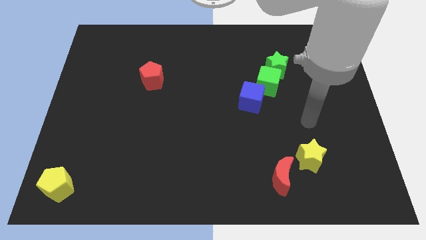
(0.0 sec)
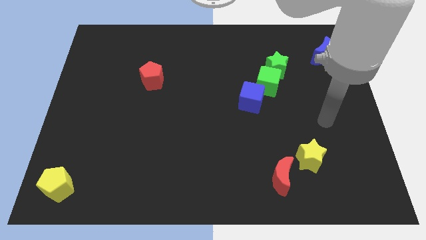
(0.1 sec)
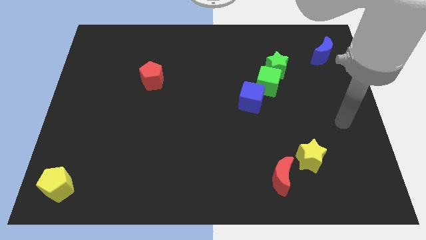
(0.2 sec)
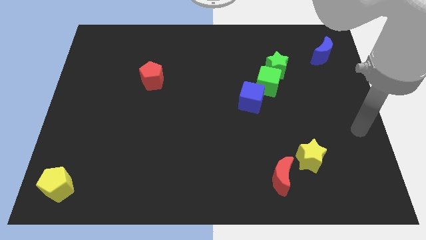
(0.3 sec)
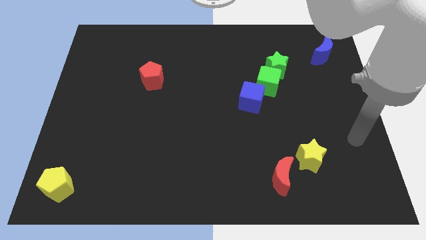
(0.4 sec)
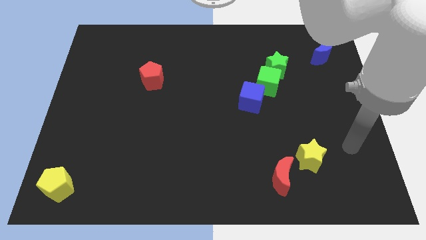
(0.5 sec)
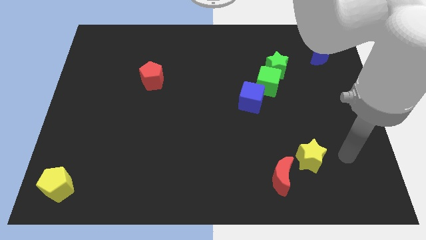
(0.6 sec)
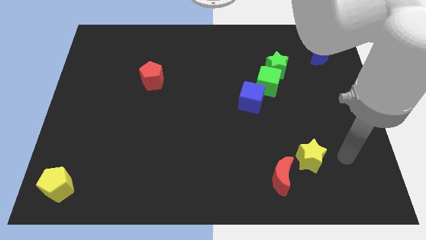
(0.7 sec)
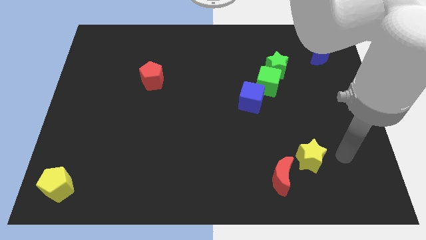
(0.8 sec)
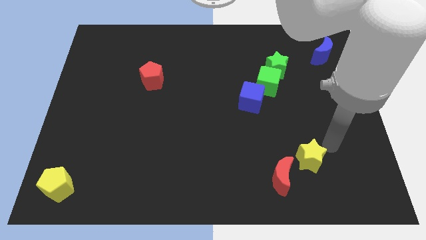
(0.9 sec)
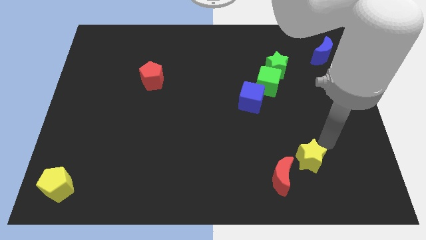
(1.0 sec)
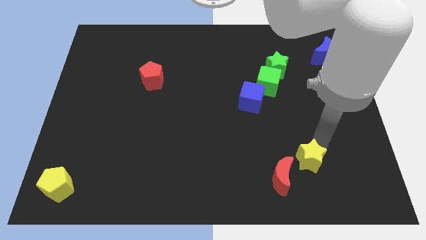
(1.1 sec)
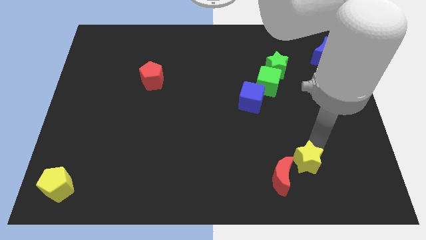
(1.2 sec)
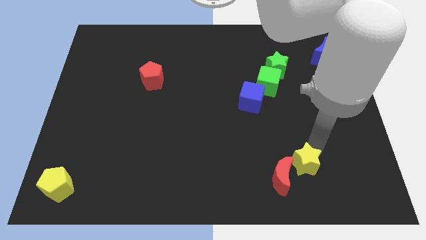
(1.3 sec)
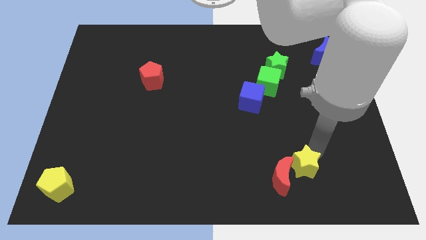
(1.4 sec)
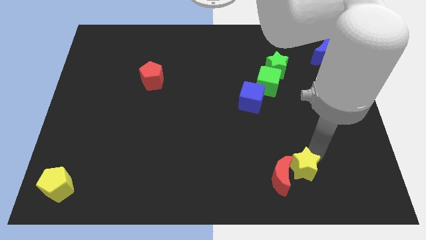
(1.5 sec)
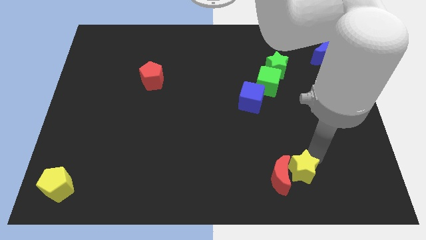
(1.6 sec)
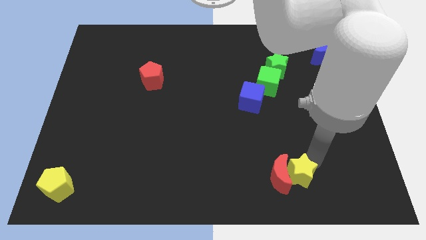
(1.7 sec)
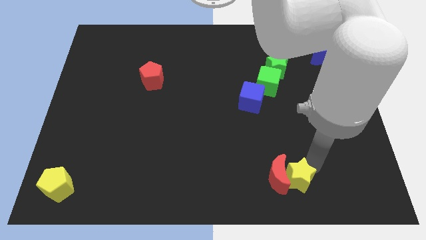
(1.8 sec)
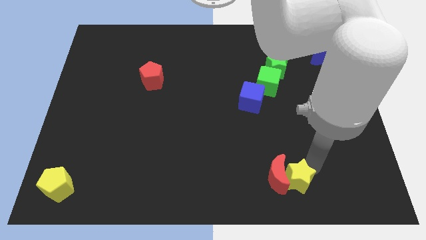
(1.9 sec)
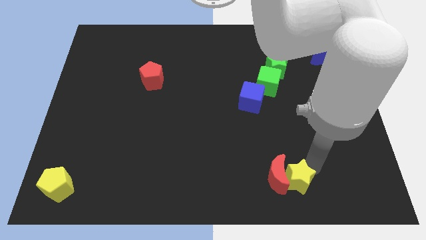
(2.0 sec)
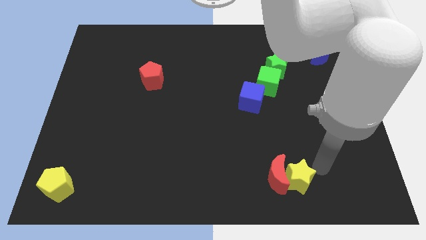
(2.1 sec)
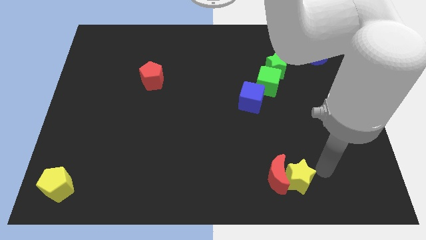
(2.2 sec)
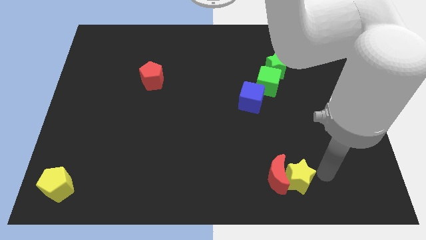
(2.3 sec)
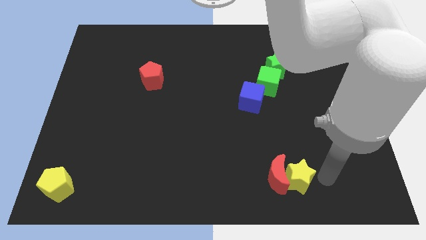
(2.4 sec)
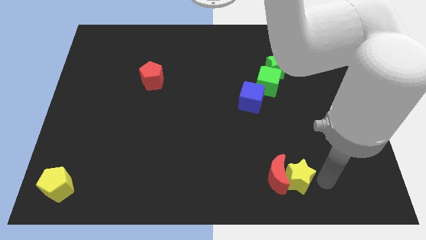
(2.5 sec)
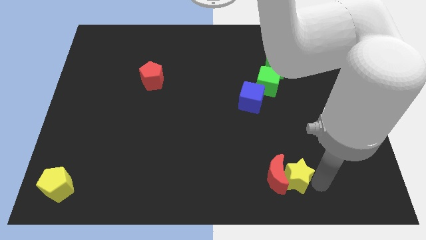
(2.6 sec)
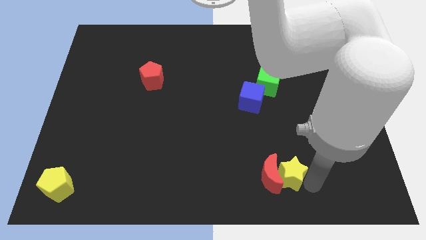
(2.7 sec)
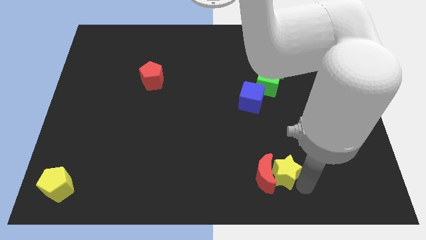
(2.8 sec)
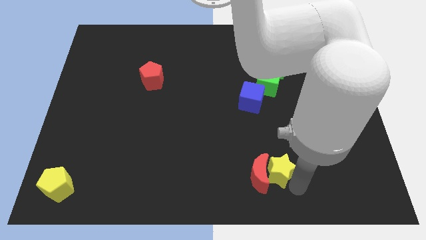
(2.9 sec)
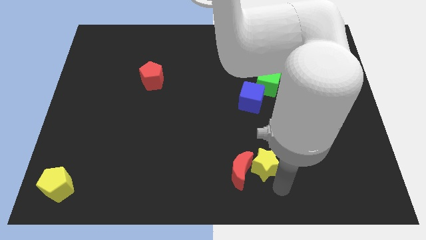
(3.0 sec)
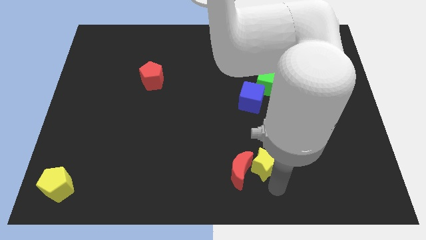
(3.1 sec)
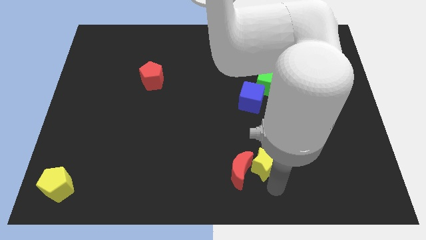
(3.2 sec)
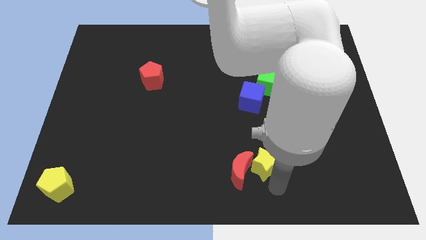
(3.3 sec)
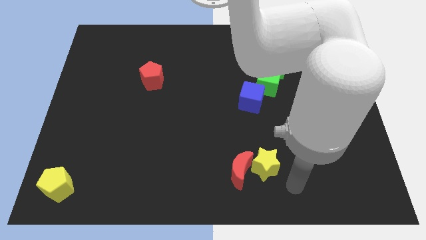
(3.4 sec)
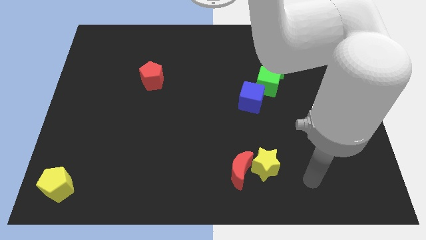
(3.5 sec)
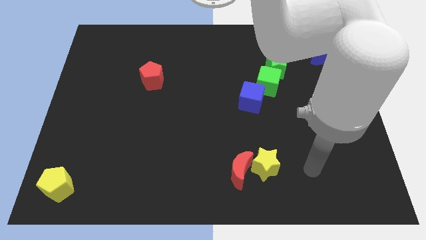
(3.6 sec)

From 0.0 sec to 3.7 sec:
push the yellow star and red crescent to the left

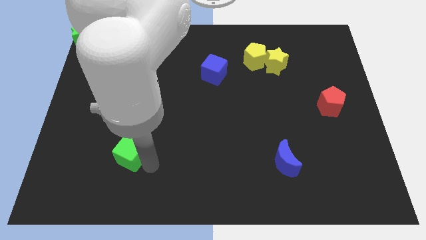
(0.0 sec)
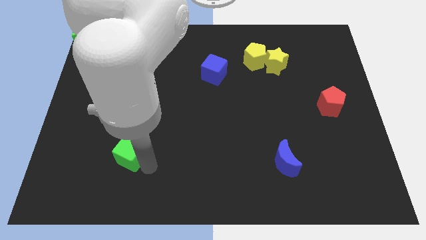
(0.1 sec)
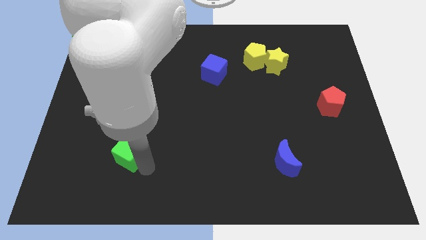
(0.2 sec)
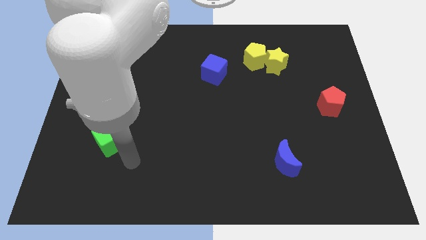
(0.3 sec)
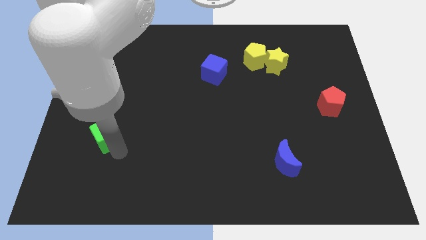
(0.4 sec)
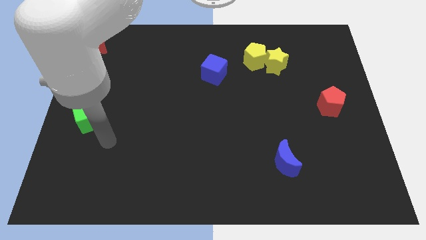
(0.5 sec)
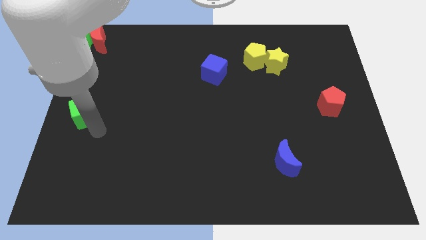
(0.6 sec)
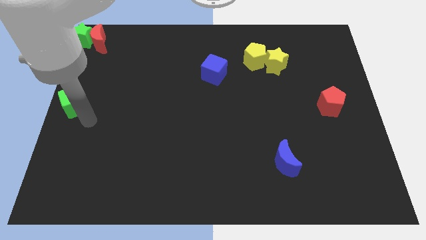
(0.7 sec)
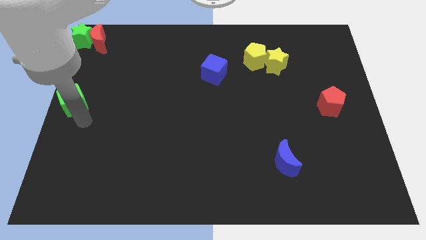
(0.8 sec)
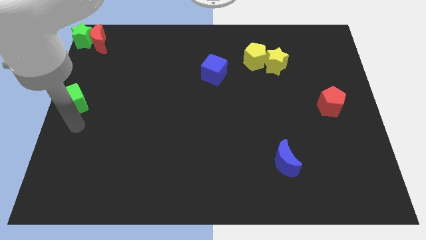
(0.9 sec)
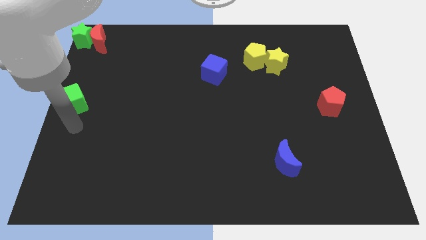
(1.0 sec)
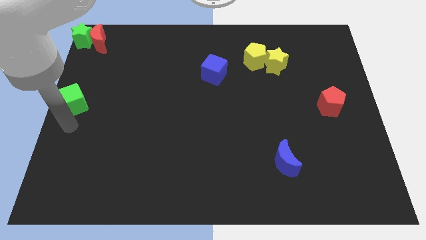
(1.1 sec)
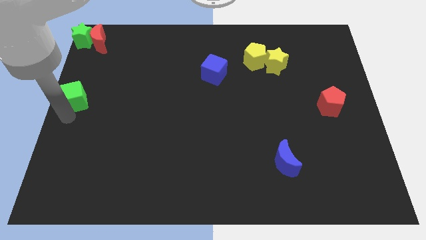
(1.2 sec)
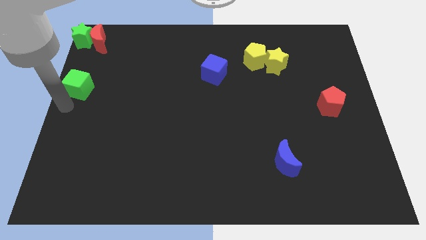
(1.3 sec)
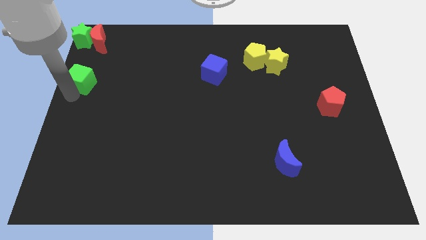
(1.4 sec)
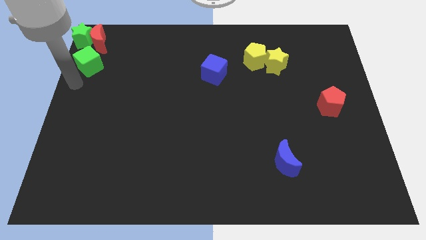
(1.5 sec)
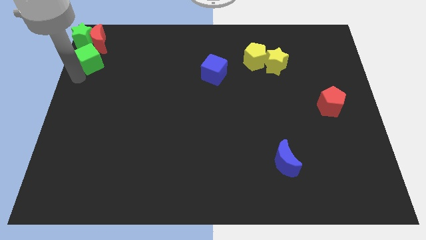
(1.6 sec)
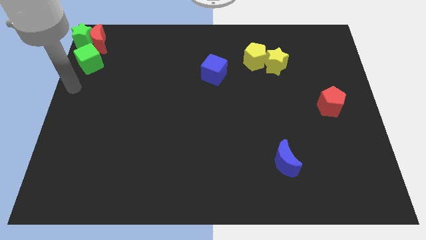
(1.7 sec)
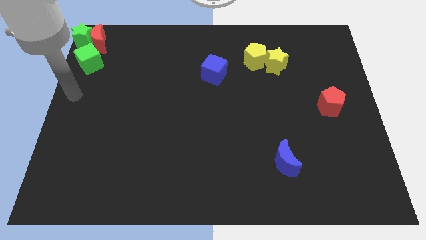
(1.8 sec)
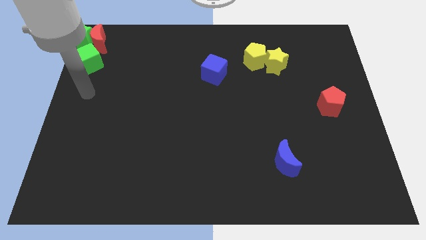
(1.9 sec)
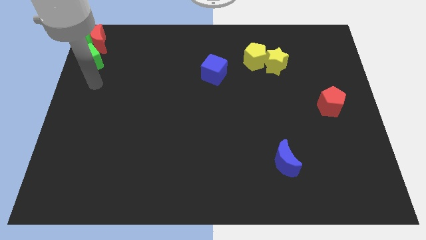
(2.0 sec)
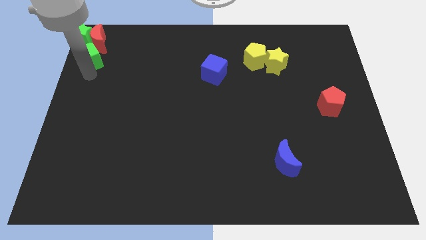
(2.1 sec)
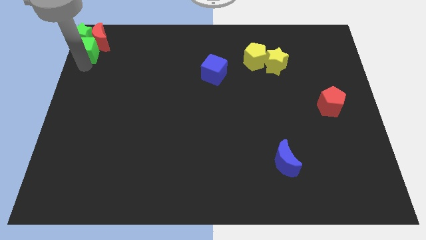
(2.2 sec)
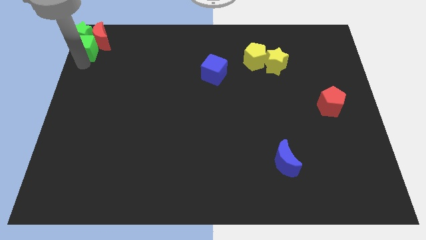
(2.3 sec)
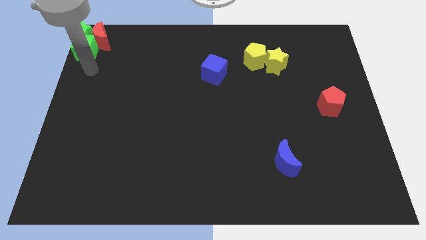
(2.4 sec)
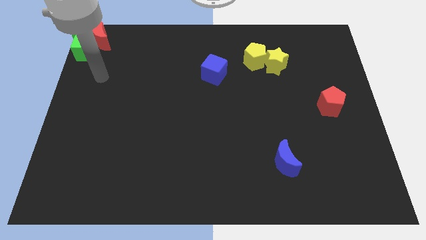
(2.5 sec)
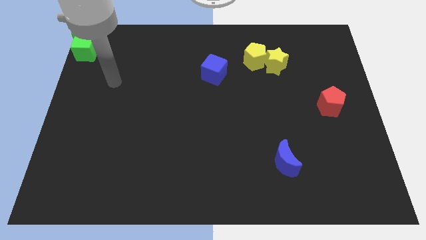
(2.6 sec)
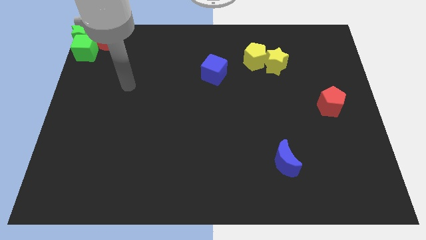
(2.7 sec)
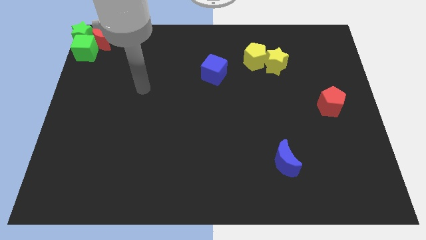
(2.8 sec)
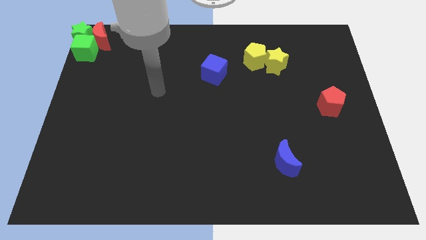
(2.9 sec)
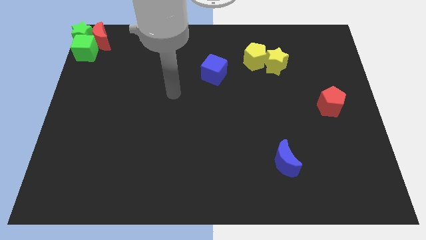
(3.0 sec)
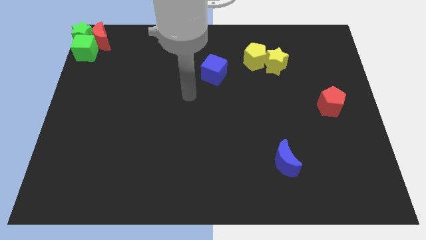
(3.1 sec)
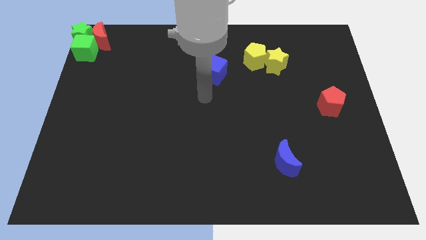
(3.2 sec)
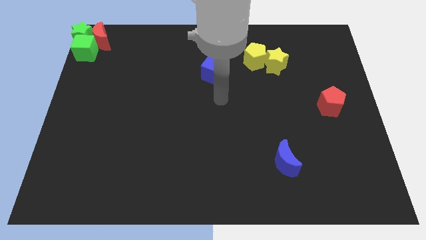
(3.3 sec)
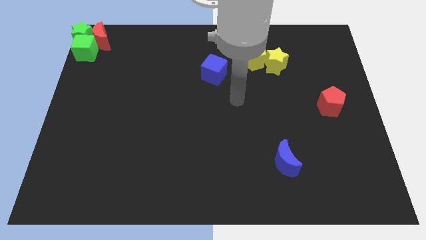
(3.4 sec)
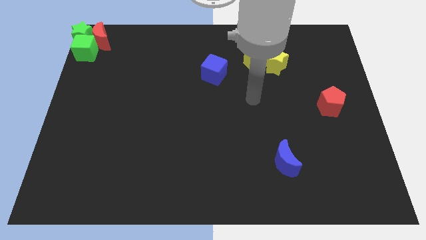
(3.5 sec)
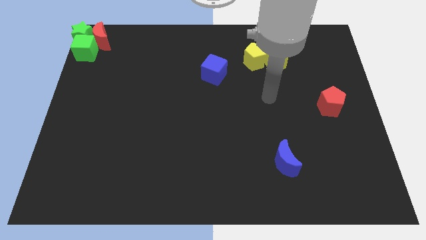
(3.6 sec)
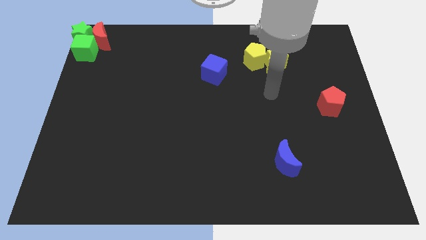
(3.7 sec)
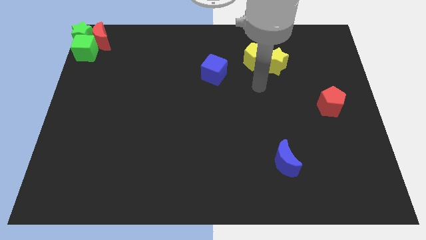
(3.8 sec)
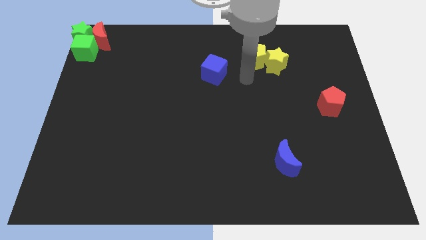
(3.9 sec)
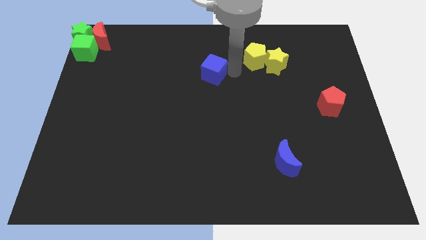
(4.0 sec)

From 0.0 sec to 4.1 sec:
move the green cube towards the green star

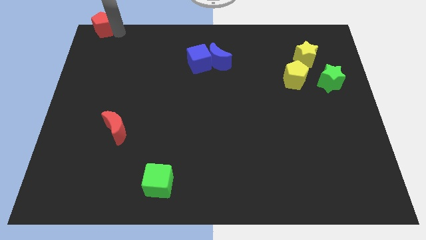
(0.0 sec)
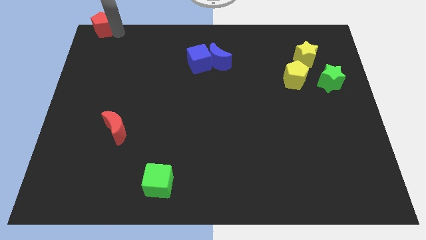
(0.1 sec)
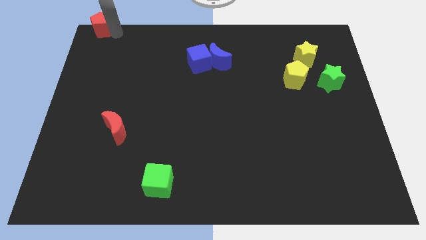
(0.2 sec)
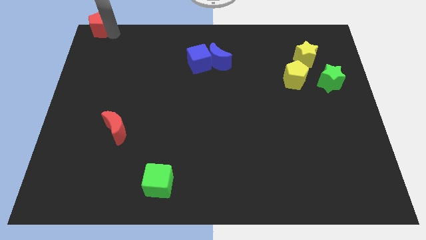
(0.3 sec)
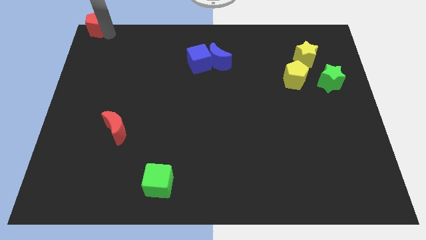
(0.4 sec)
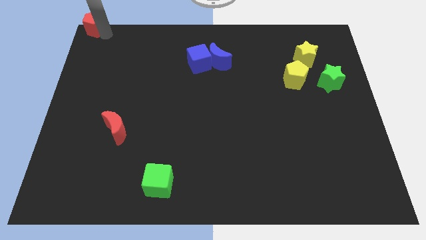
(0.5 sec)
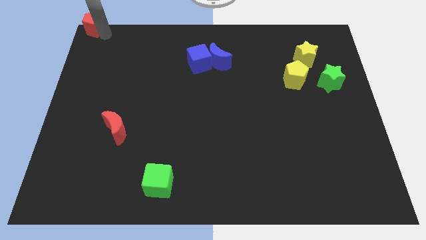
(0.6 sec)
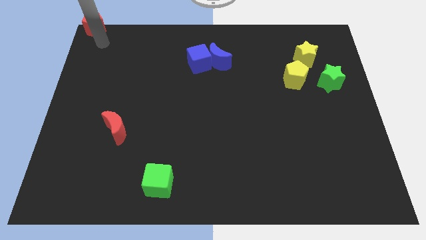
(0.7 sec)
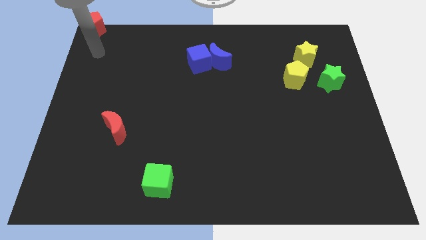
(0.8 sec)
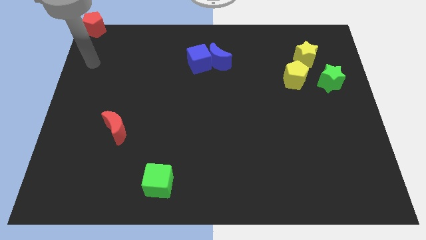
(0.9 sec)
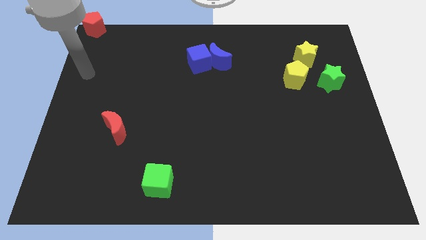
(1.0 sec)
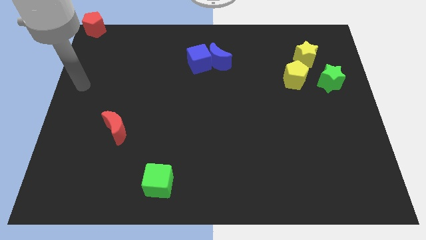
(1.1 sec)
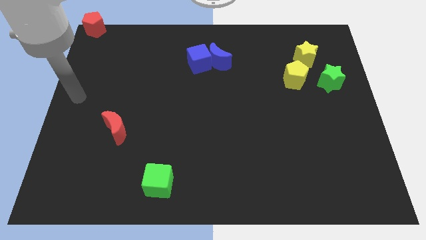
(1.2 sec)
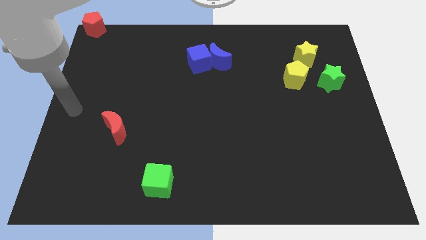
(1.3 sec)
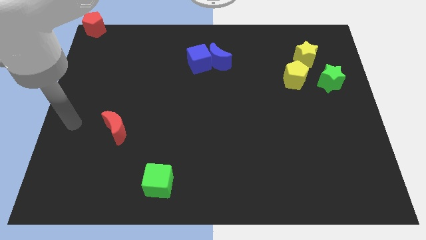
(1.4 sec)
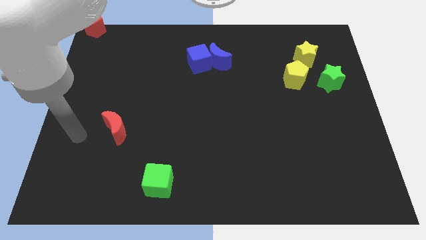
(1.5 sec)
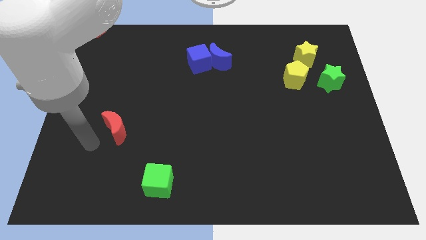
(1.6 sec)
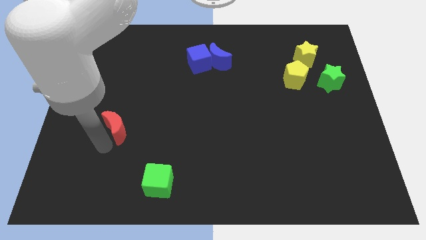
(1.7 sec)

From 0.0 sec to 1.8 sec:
point your arm to the left of the red moon
